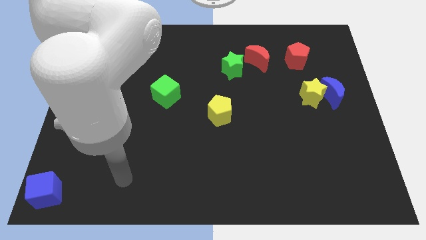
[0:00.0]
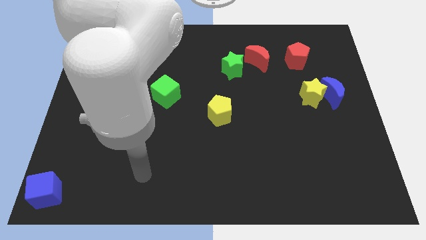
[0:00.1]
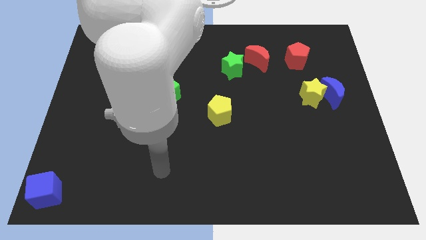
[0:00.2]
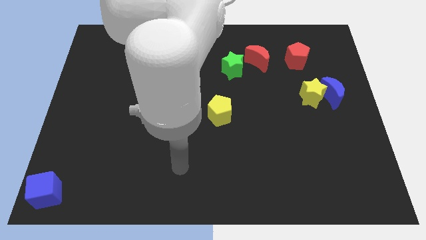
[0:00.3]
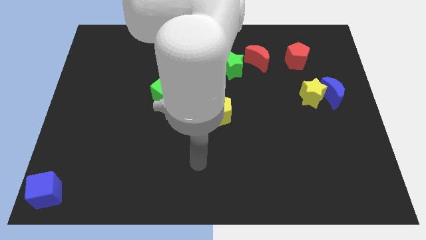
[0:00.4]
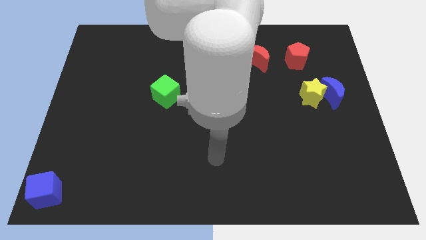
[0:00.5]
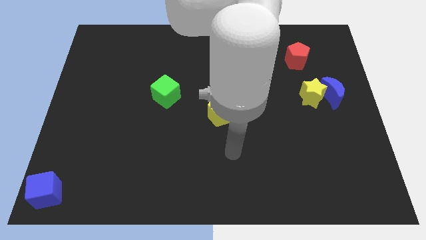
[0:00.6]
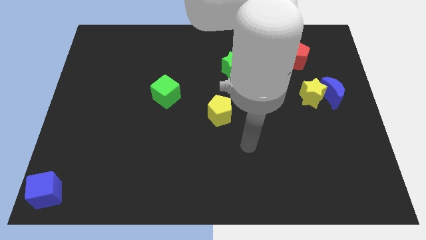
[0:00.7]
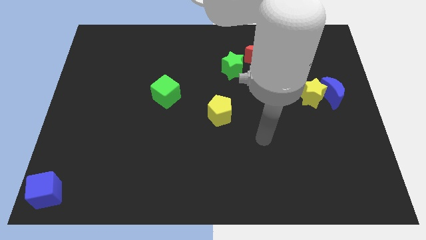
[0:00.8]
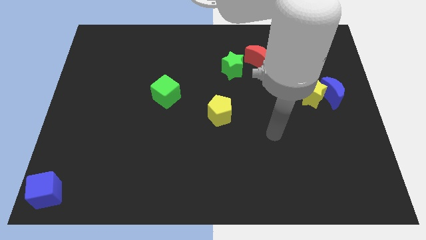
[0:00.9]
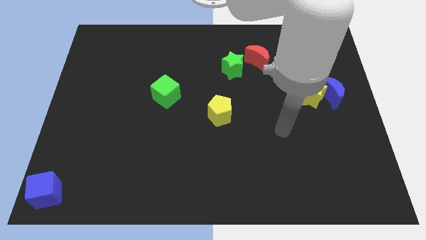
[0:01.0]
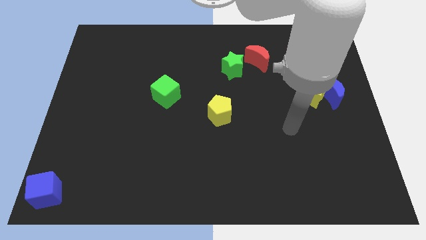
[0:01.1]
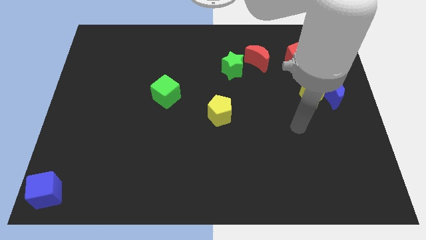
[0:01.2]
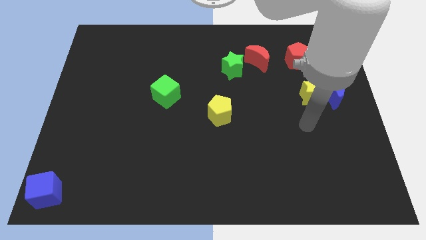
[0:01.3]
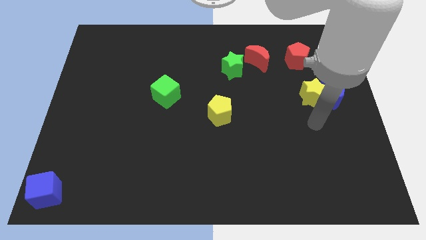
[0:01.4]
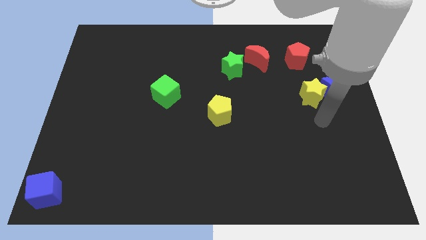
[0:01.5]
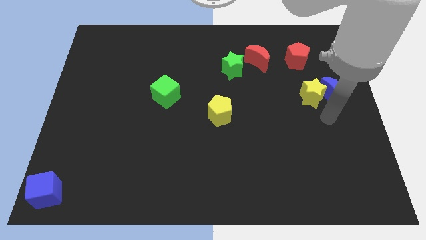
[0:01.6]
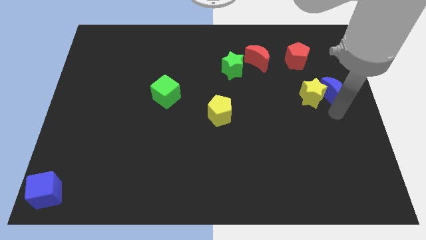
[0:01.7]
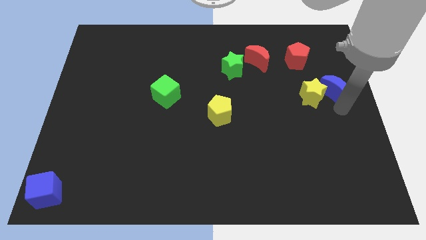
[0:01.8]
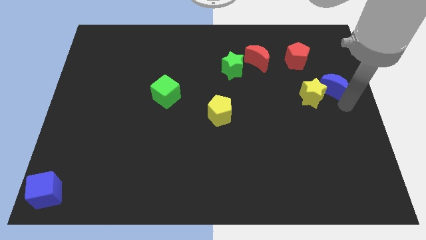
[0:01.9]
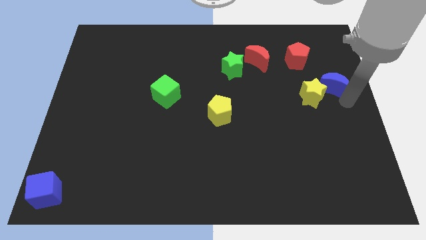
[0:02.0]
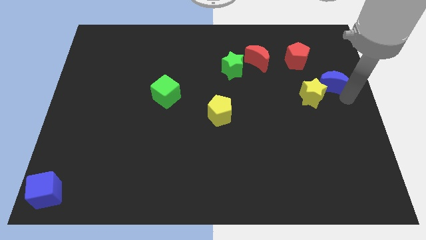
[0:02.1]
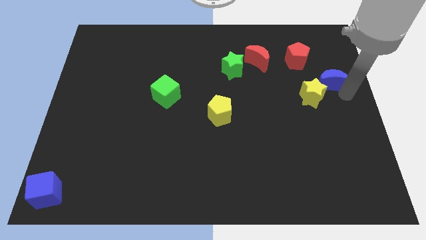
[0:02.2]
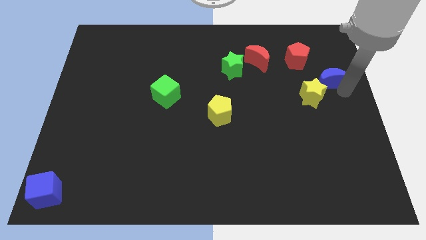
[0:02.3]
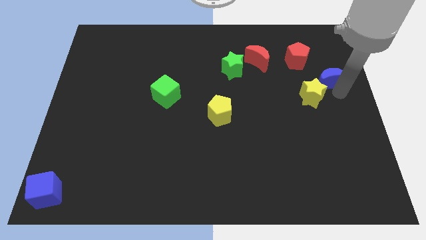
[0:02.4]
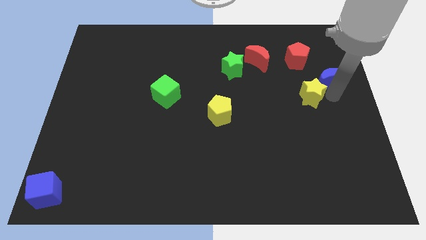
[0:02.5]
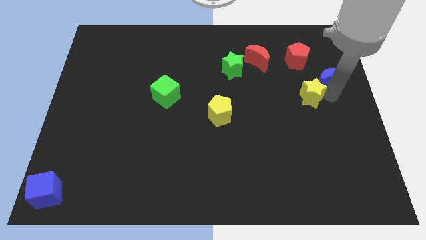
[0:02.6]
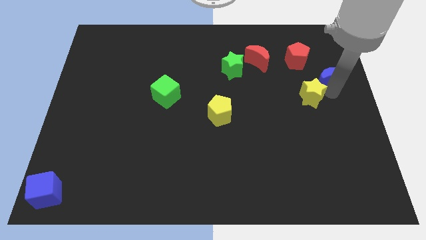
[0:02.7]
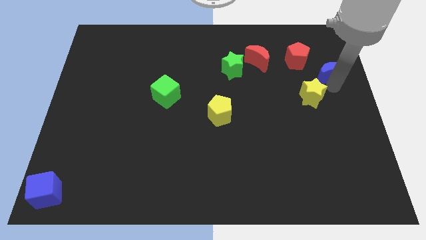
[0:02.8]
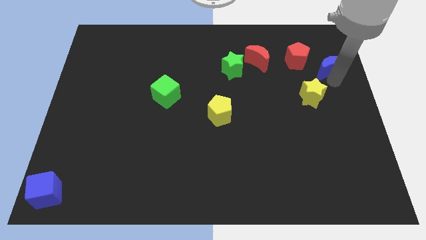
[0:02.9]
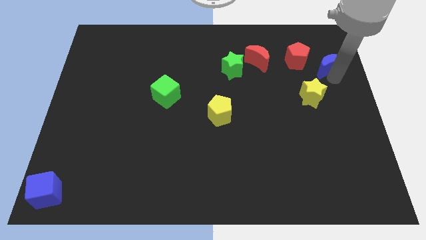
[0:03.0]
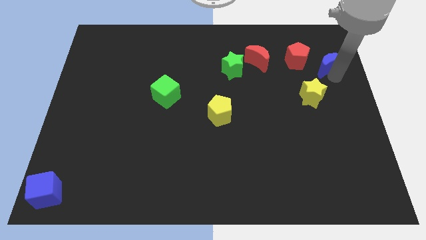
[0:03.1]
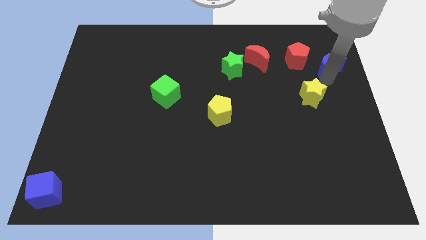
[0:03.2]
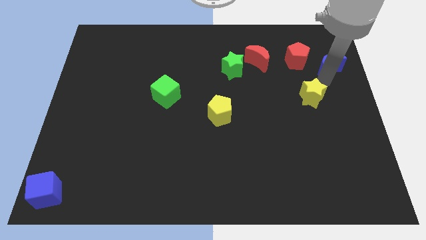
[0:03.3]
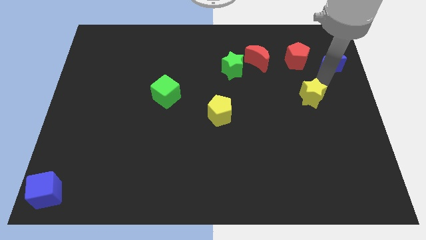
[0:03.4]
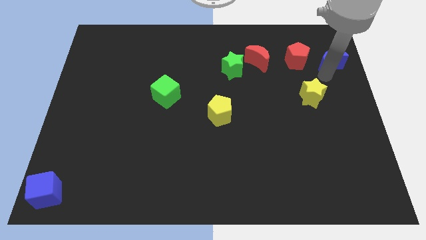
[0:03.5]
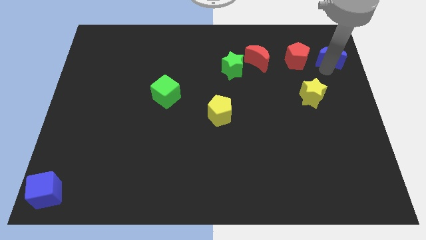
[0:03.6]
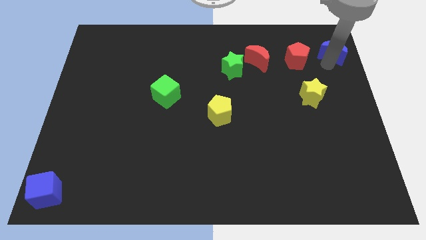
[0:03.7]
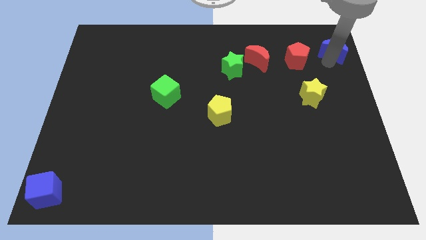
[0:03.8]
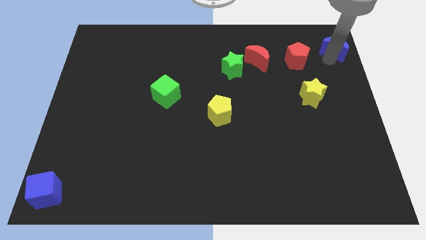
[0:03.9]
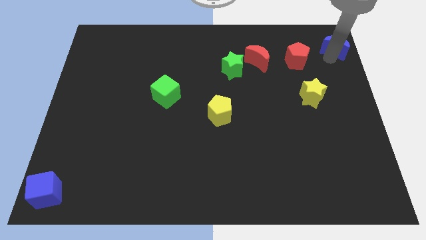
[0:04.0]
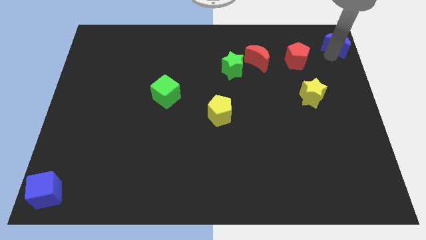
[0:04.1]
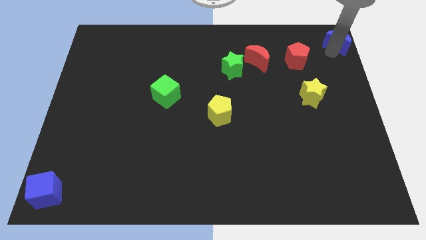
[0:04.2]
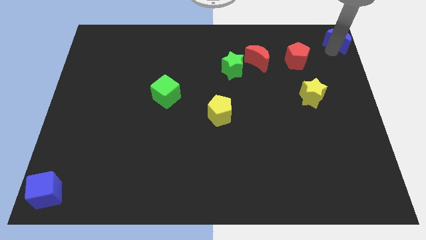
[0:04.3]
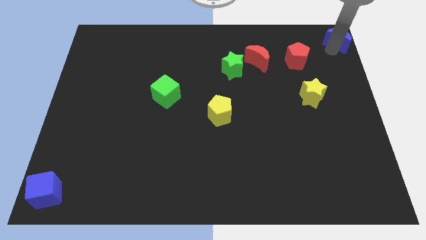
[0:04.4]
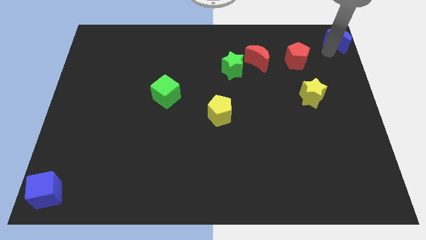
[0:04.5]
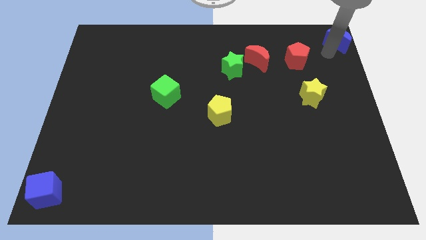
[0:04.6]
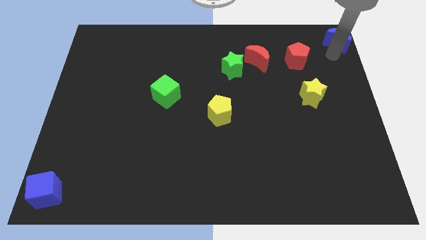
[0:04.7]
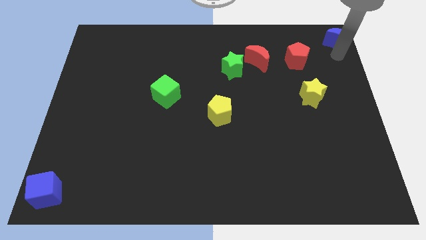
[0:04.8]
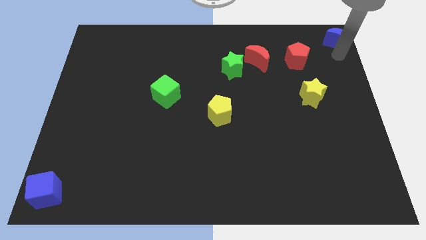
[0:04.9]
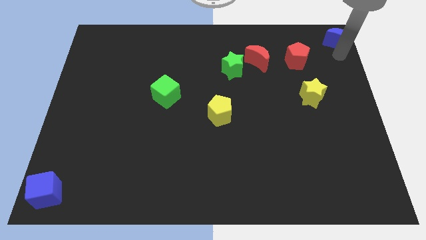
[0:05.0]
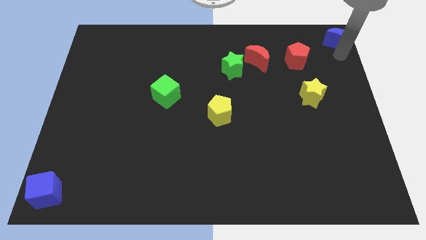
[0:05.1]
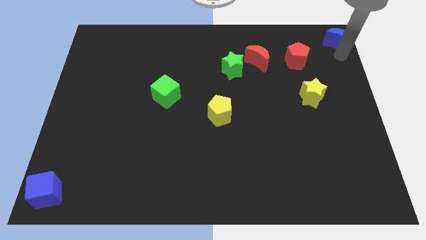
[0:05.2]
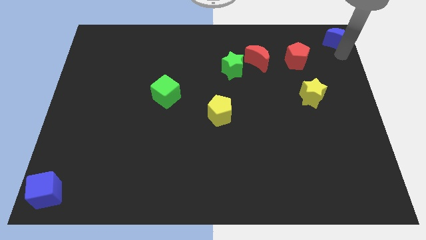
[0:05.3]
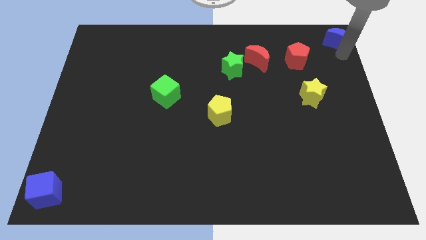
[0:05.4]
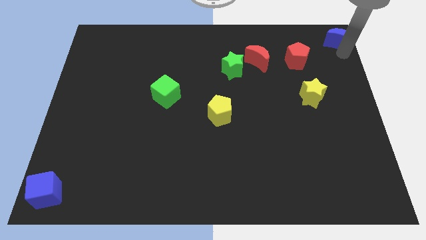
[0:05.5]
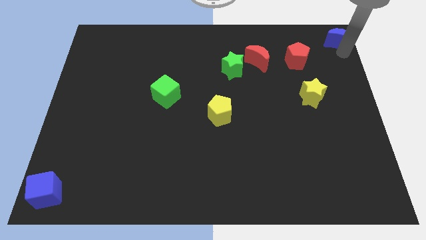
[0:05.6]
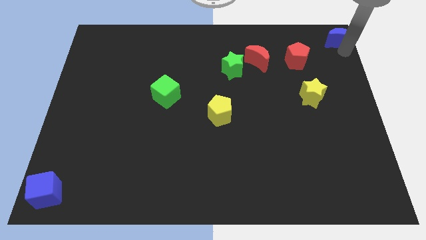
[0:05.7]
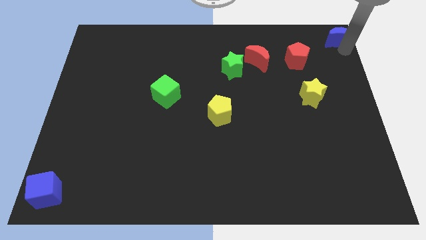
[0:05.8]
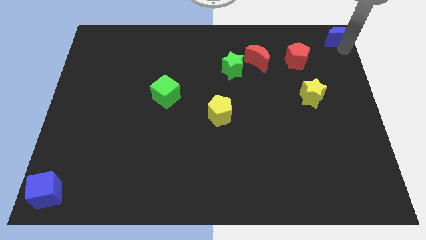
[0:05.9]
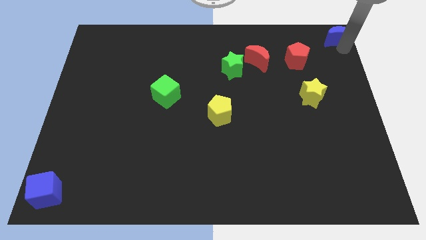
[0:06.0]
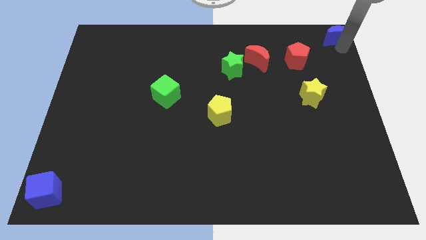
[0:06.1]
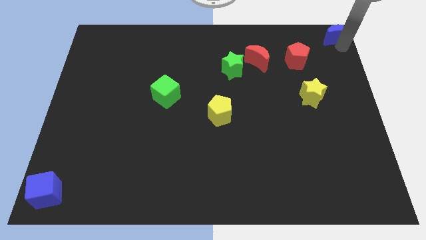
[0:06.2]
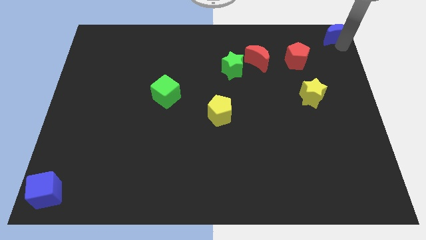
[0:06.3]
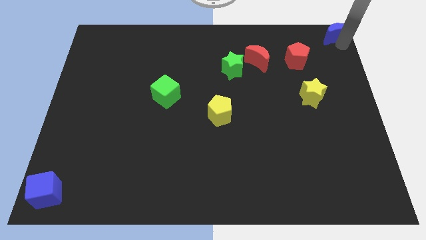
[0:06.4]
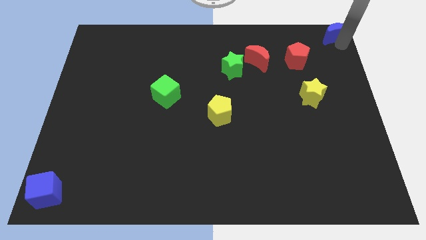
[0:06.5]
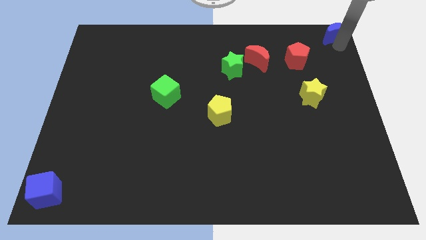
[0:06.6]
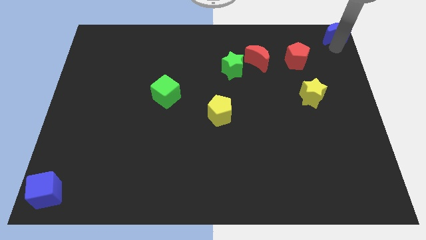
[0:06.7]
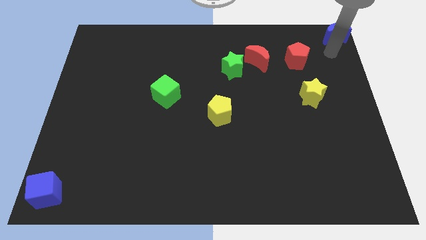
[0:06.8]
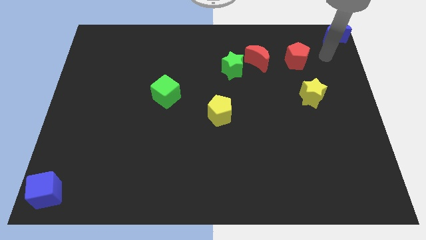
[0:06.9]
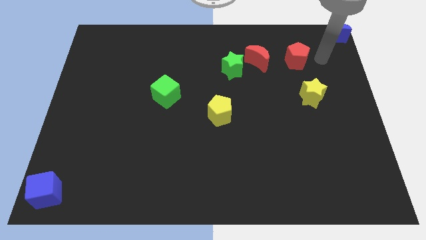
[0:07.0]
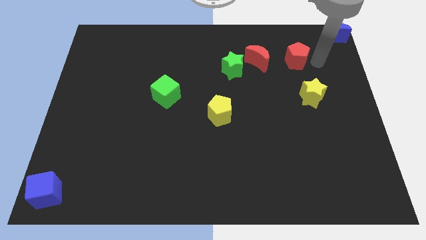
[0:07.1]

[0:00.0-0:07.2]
place blue crescent on top right corner

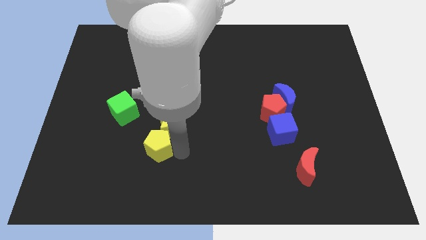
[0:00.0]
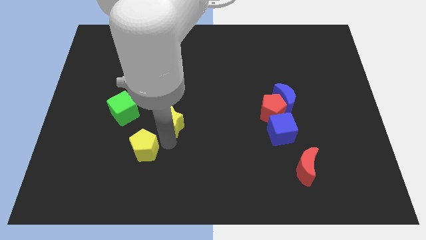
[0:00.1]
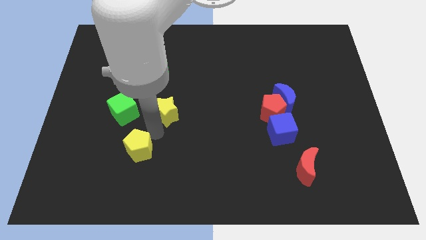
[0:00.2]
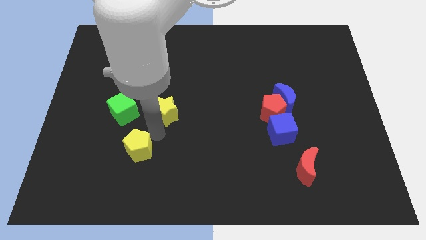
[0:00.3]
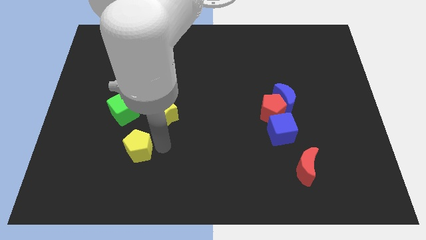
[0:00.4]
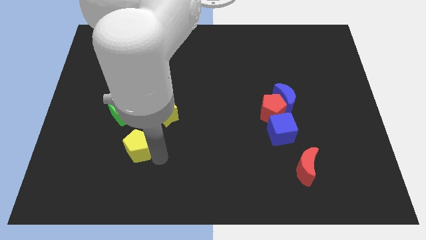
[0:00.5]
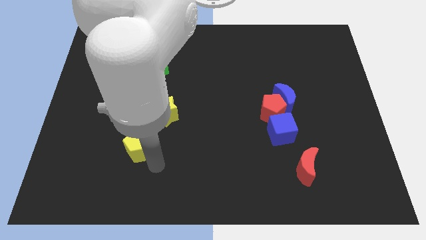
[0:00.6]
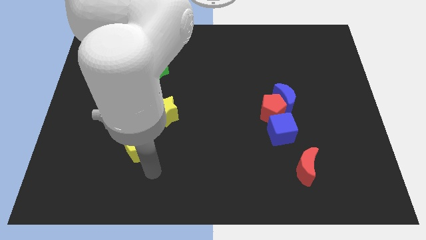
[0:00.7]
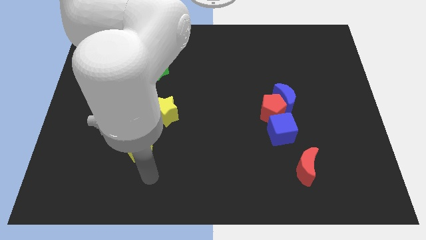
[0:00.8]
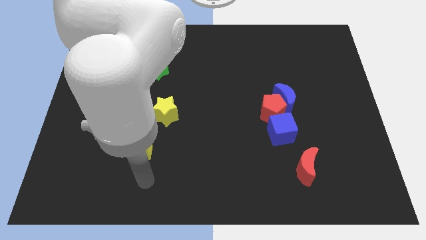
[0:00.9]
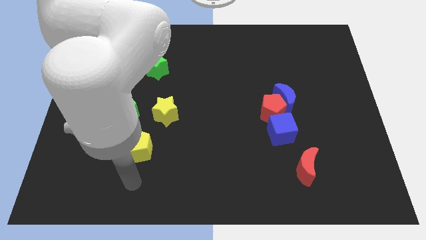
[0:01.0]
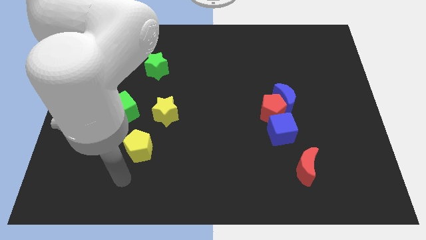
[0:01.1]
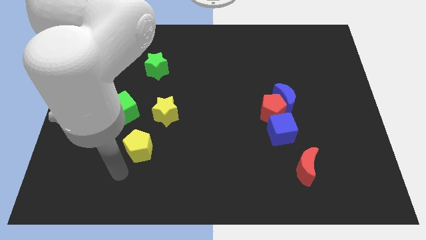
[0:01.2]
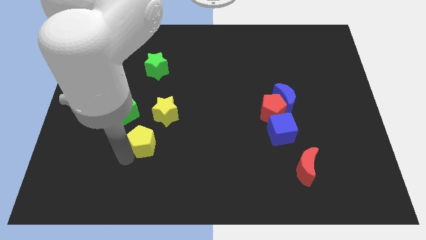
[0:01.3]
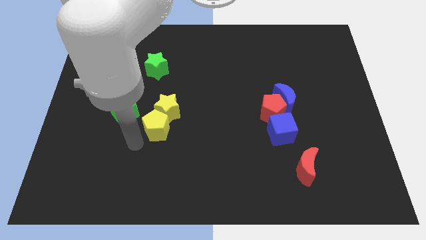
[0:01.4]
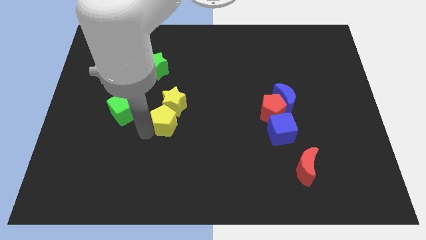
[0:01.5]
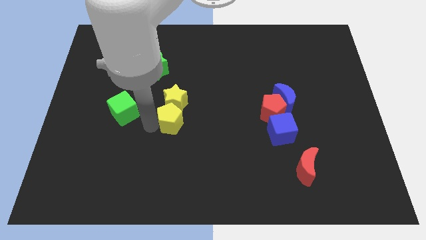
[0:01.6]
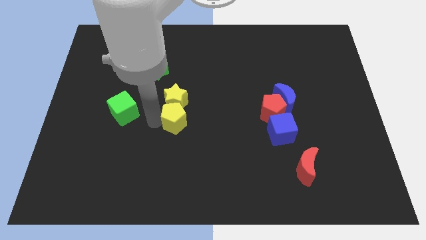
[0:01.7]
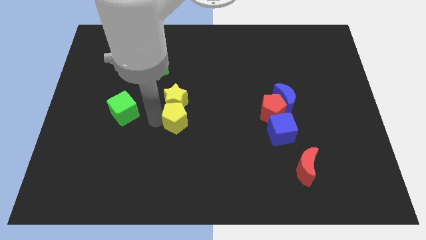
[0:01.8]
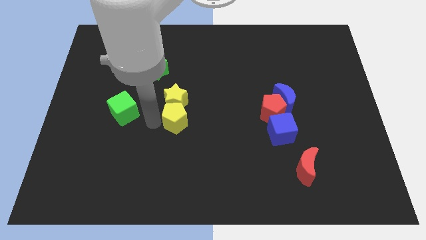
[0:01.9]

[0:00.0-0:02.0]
slide both the yellow blocks to the right side of the green cube
